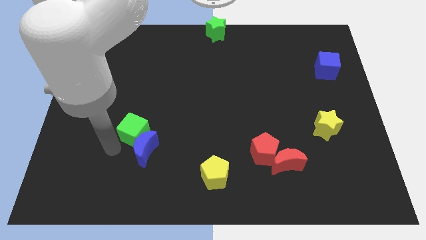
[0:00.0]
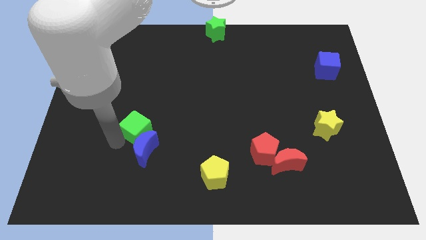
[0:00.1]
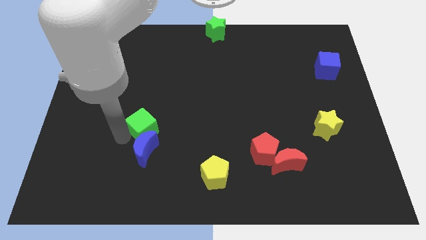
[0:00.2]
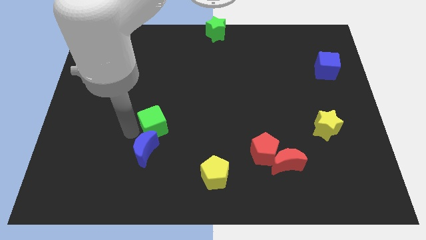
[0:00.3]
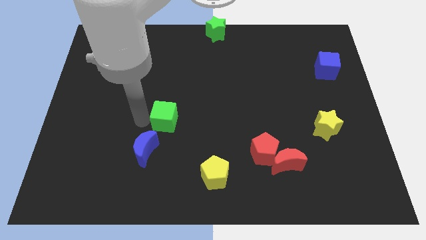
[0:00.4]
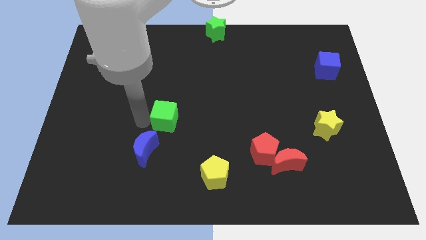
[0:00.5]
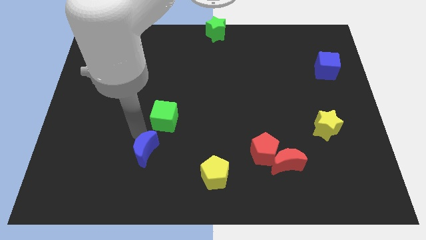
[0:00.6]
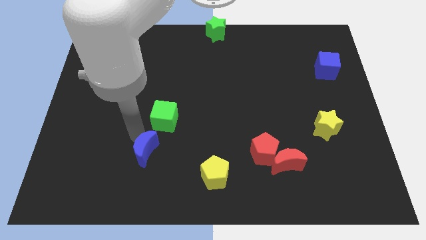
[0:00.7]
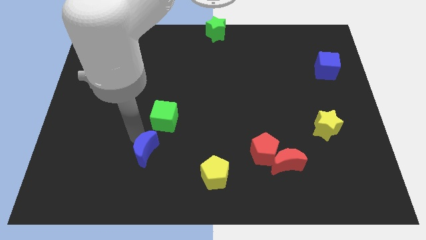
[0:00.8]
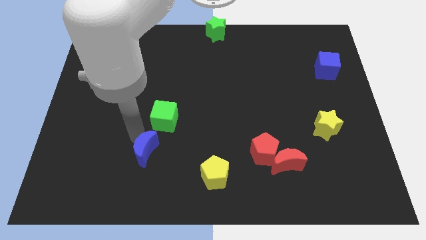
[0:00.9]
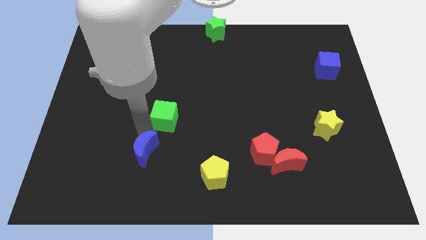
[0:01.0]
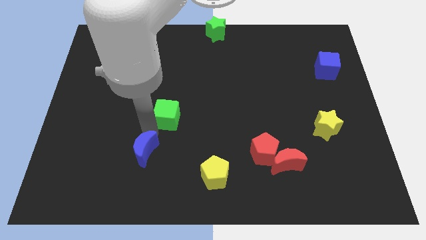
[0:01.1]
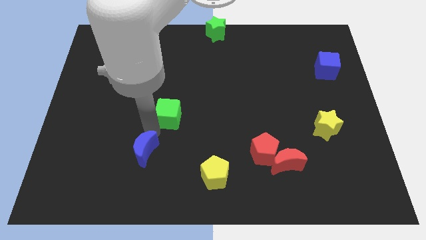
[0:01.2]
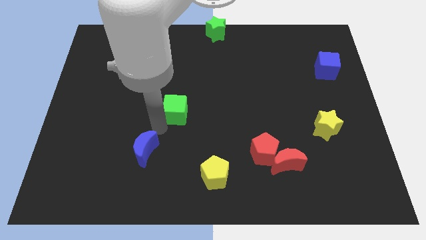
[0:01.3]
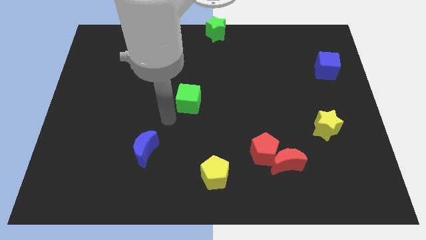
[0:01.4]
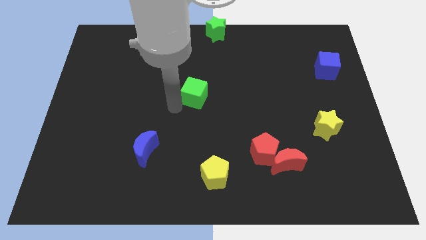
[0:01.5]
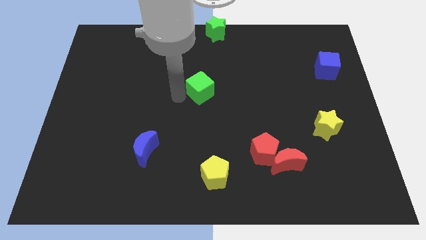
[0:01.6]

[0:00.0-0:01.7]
move the green cube to the center

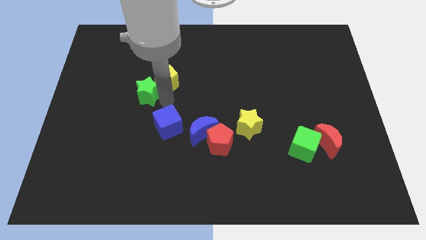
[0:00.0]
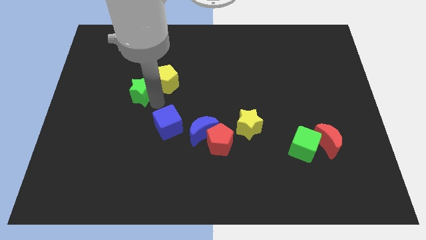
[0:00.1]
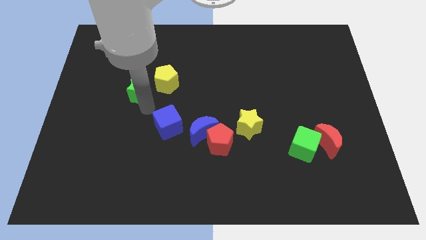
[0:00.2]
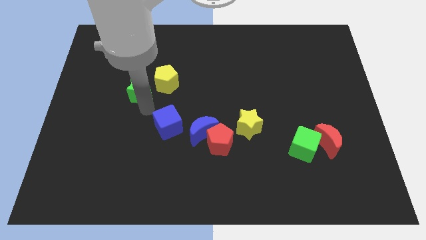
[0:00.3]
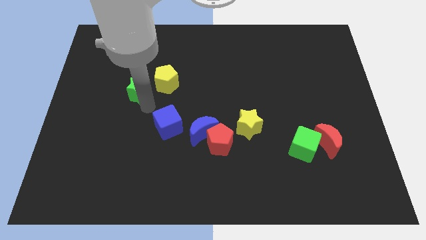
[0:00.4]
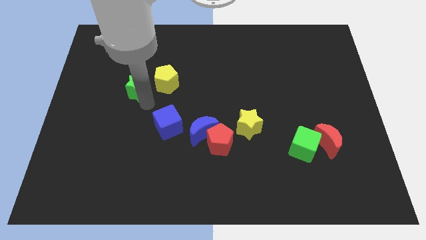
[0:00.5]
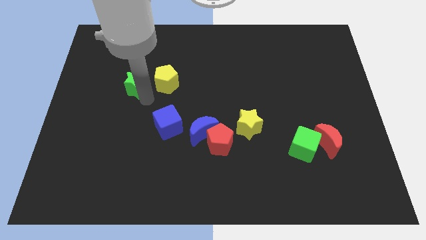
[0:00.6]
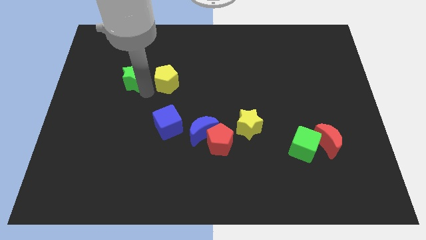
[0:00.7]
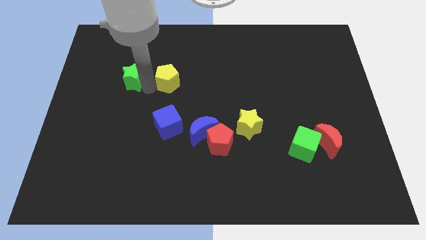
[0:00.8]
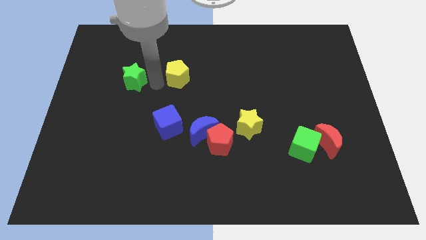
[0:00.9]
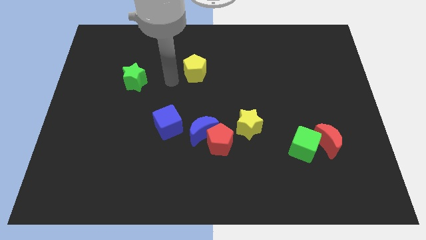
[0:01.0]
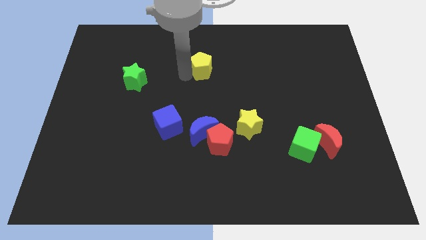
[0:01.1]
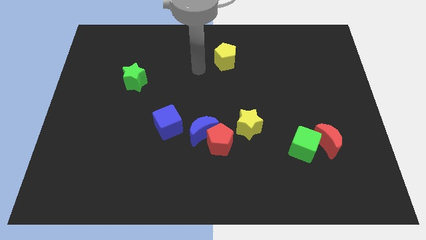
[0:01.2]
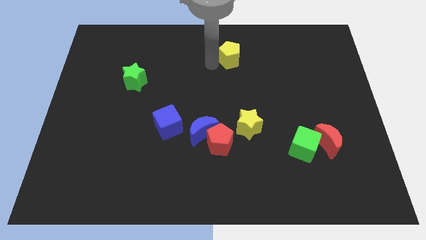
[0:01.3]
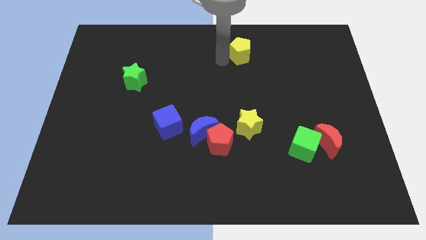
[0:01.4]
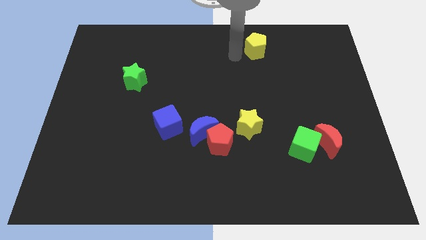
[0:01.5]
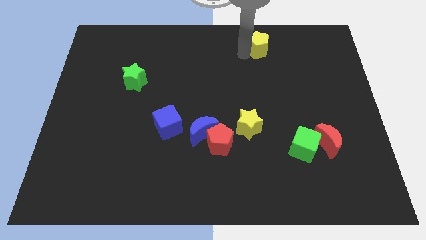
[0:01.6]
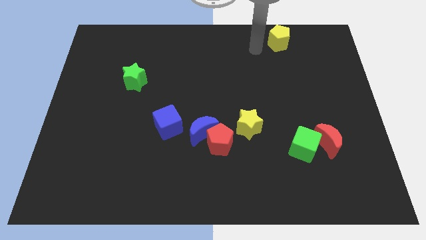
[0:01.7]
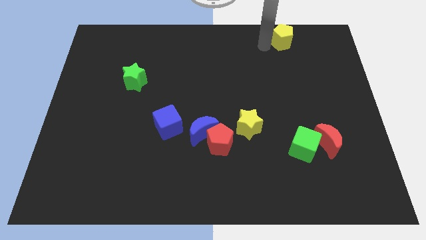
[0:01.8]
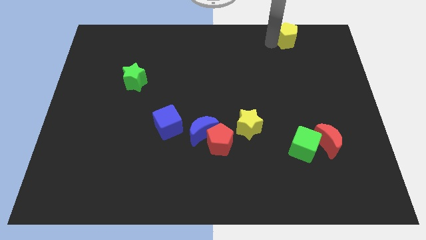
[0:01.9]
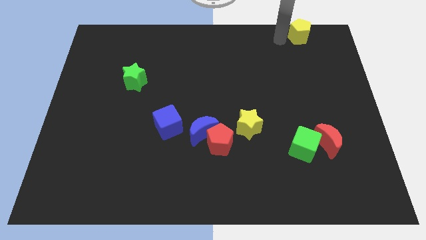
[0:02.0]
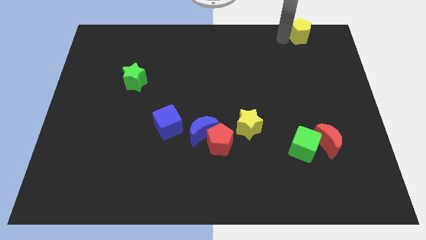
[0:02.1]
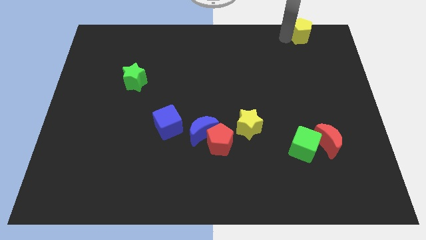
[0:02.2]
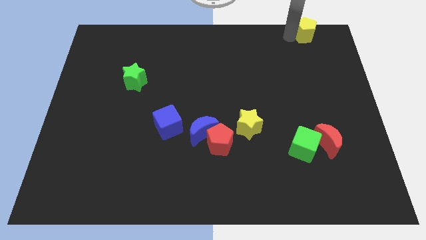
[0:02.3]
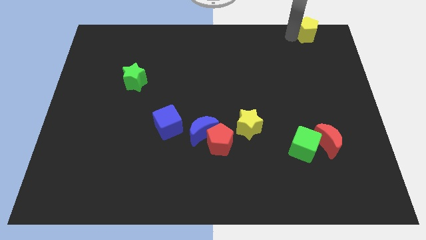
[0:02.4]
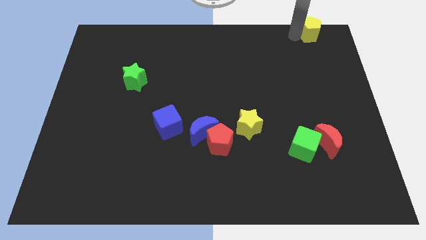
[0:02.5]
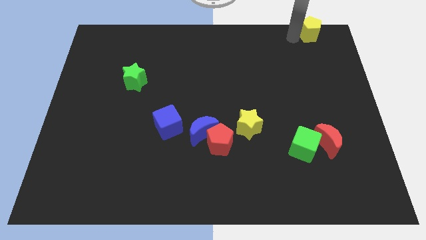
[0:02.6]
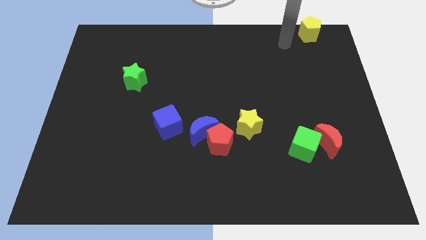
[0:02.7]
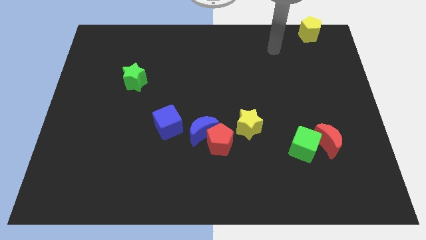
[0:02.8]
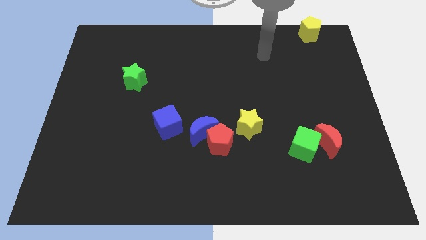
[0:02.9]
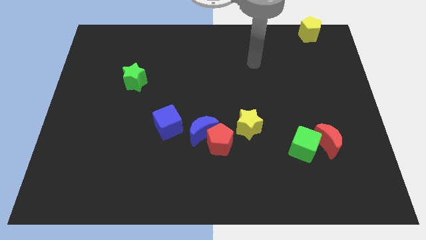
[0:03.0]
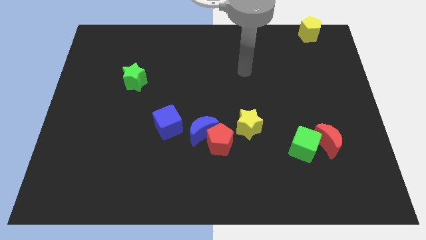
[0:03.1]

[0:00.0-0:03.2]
move the yellow pentagon to the top right corner

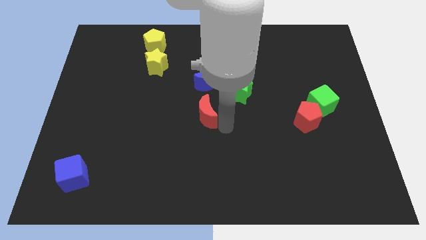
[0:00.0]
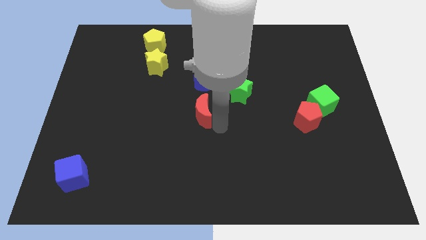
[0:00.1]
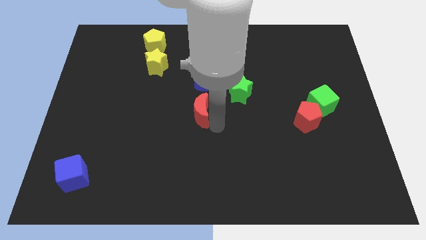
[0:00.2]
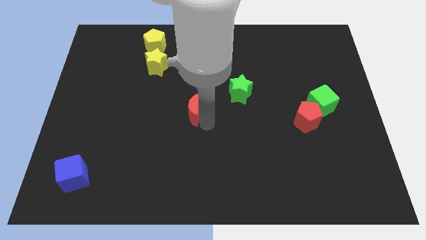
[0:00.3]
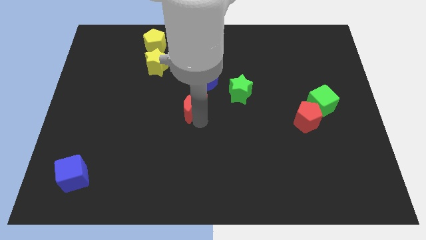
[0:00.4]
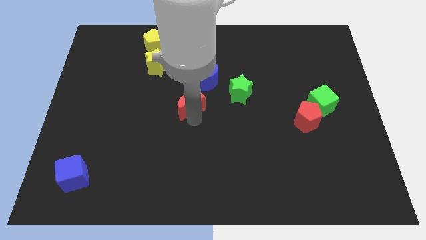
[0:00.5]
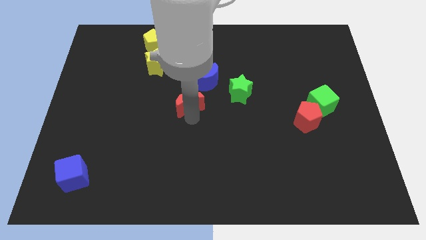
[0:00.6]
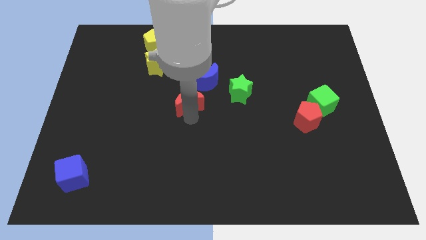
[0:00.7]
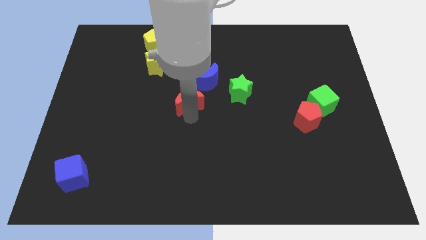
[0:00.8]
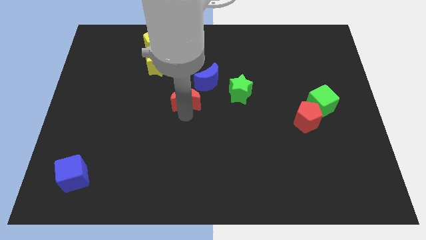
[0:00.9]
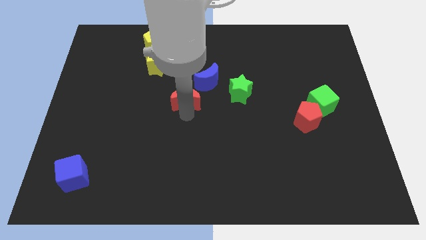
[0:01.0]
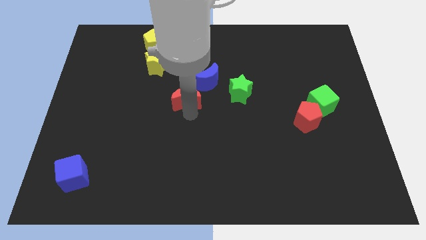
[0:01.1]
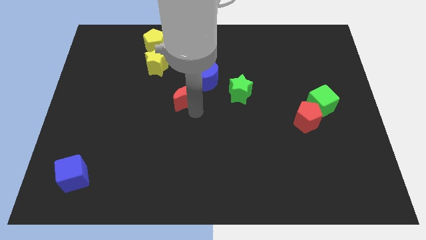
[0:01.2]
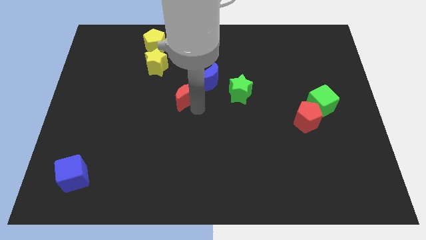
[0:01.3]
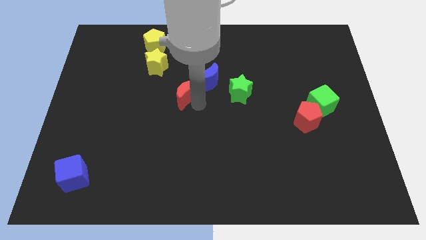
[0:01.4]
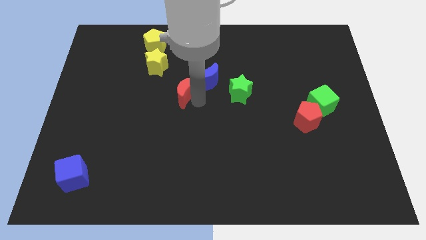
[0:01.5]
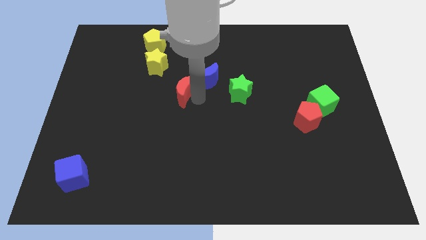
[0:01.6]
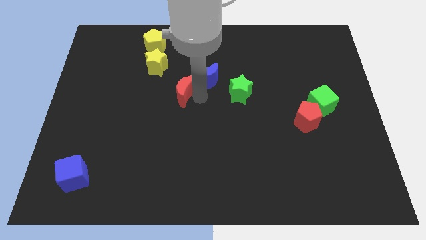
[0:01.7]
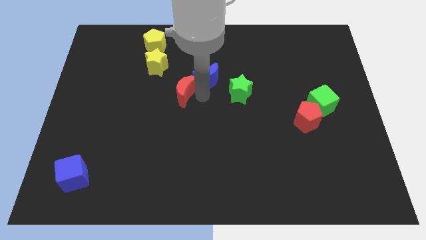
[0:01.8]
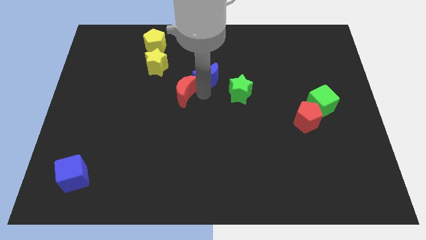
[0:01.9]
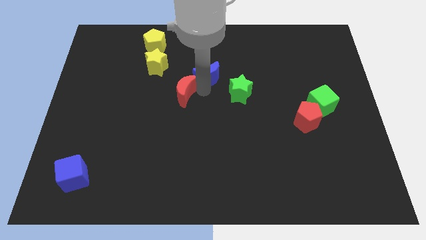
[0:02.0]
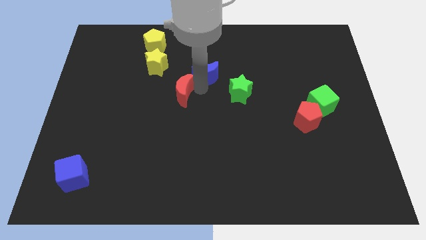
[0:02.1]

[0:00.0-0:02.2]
push the red moon into the blue moon

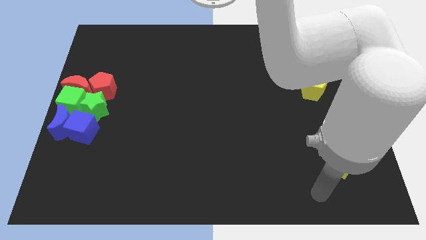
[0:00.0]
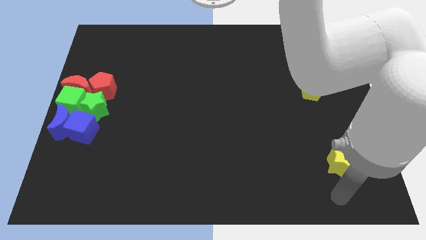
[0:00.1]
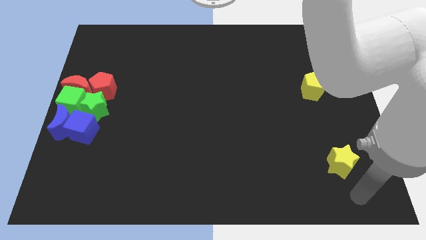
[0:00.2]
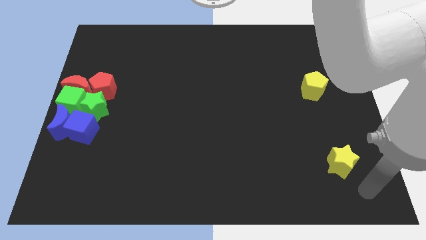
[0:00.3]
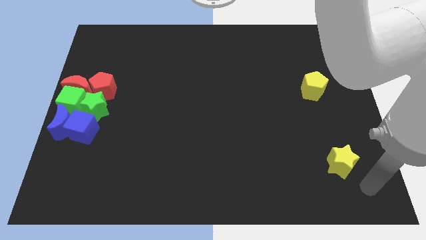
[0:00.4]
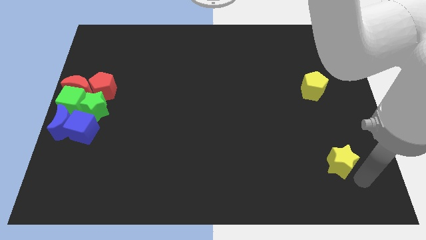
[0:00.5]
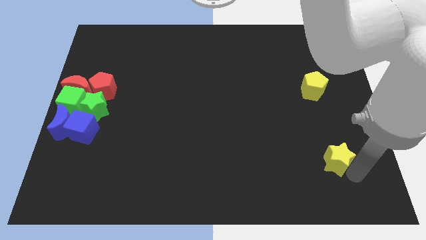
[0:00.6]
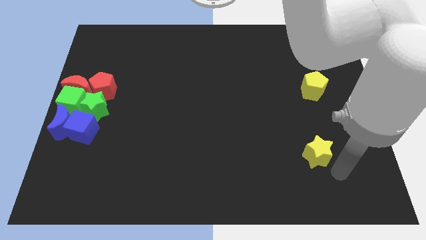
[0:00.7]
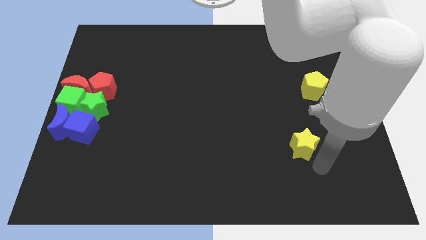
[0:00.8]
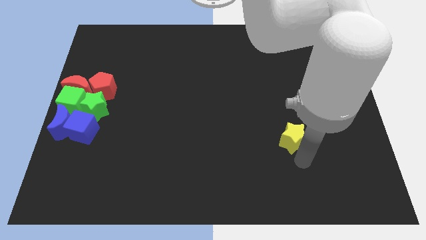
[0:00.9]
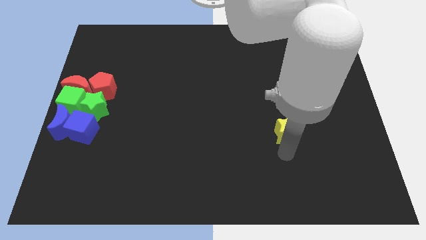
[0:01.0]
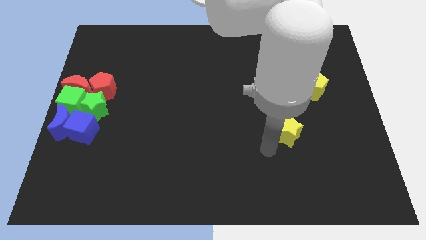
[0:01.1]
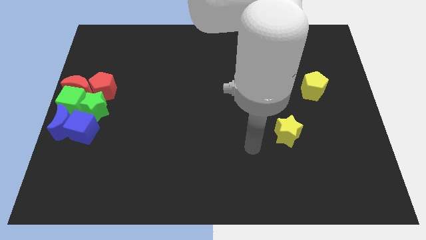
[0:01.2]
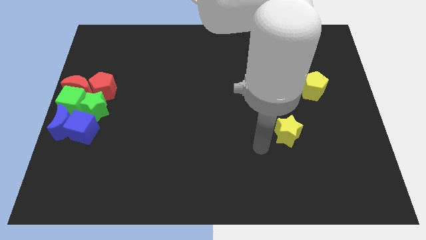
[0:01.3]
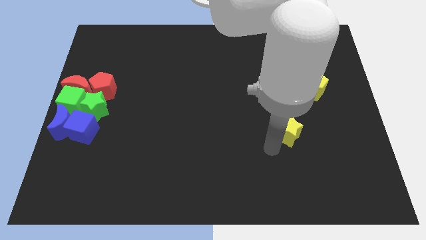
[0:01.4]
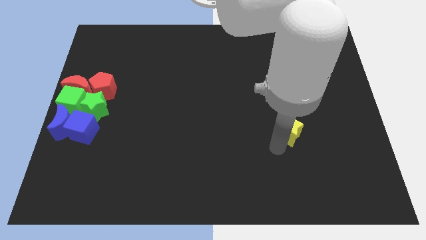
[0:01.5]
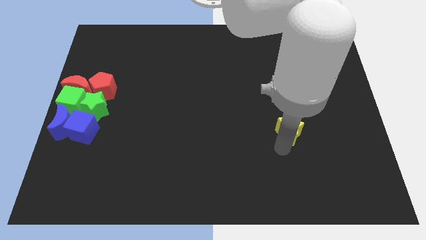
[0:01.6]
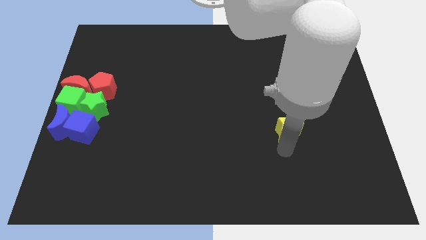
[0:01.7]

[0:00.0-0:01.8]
move the yellow star towards the center of board
